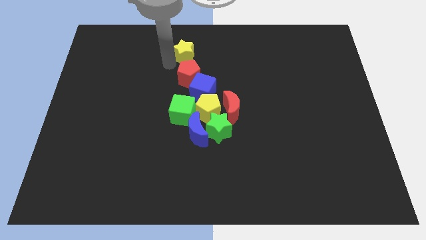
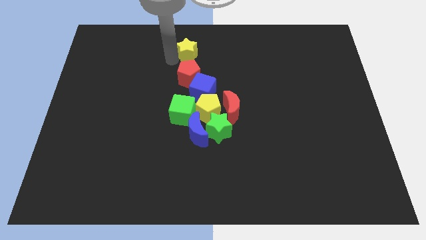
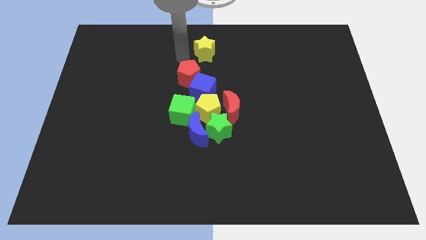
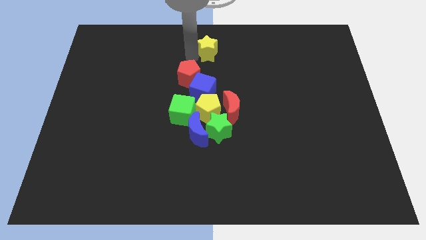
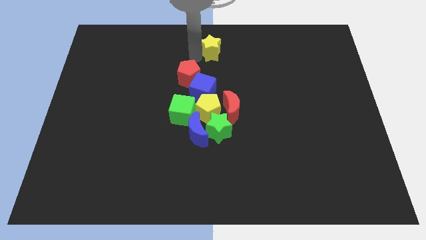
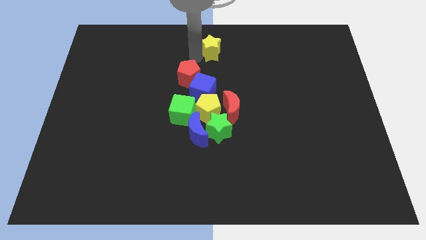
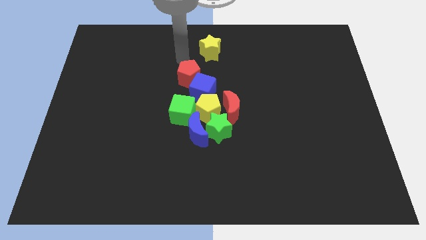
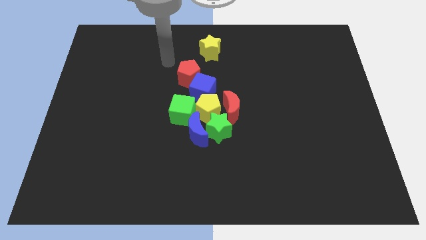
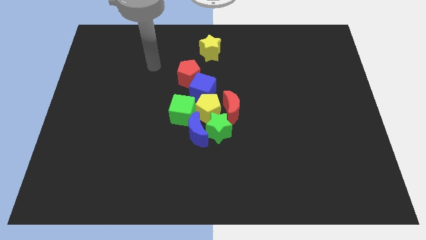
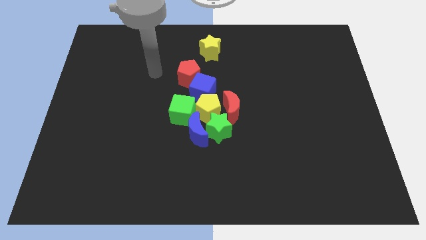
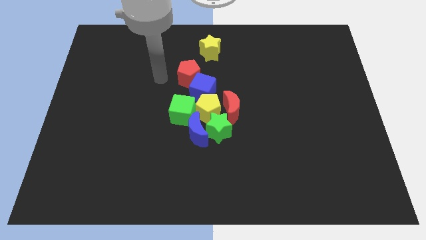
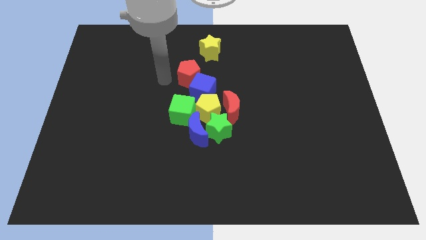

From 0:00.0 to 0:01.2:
separate yellow star from the red pentagon

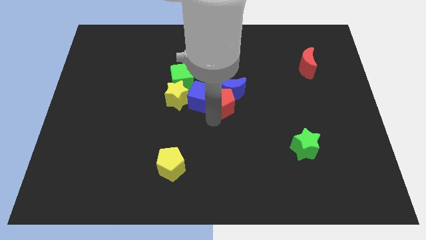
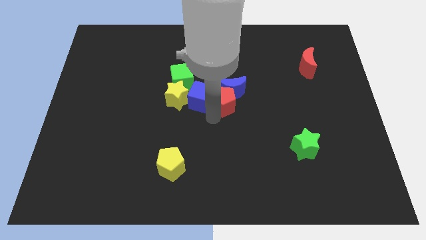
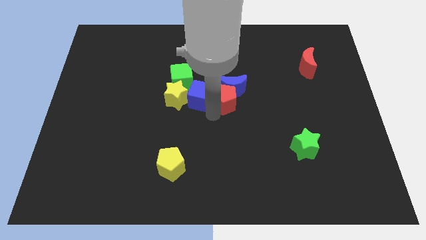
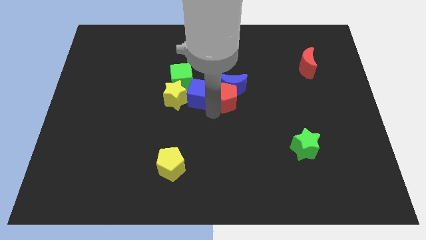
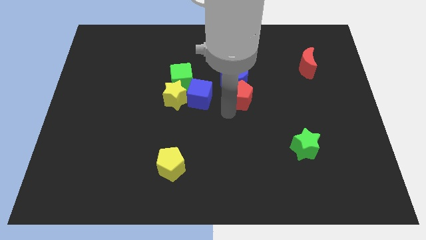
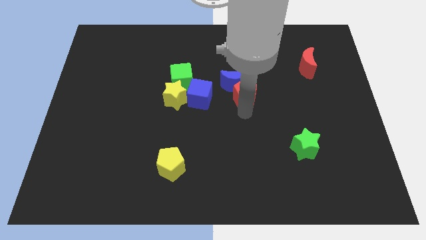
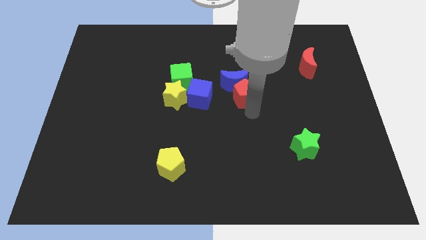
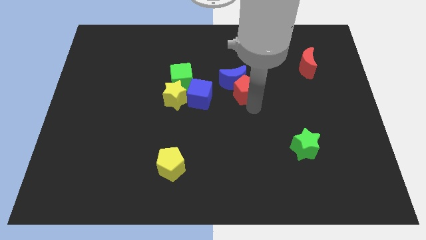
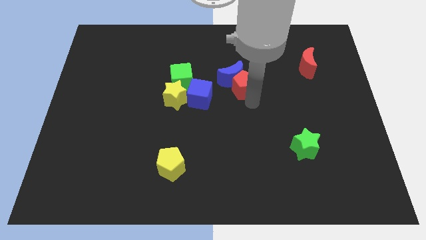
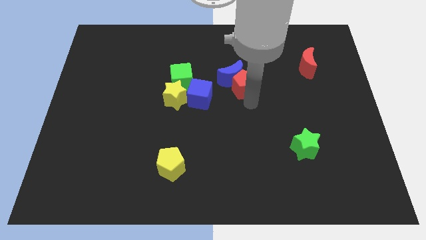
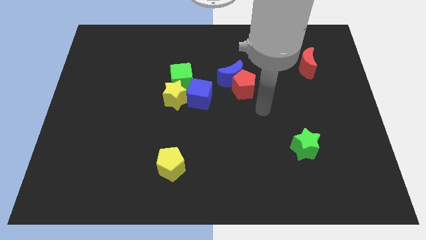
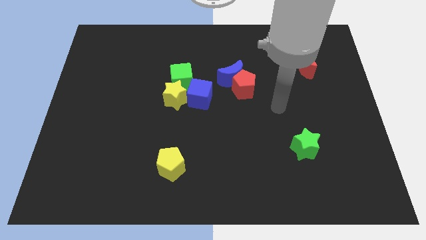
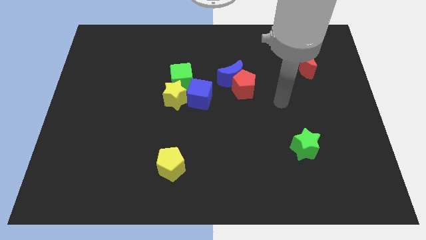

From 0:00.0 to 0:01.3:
push the blue crescent with the help of red pentagon

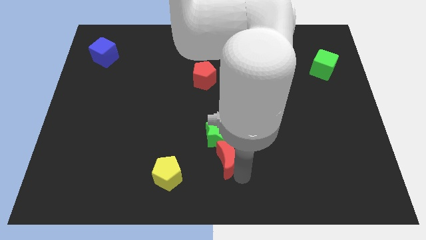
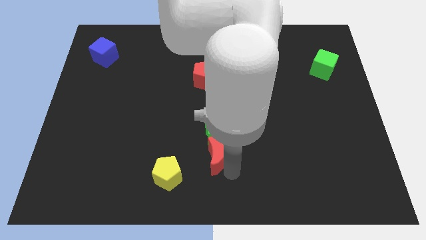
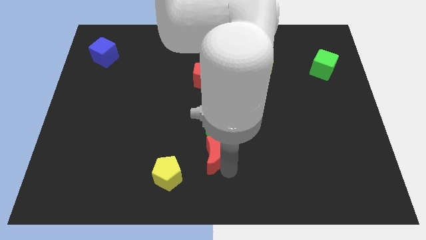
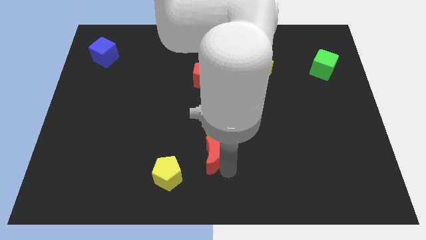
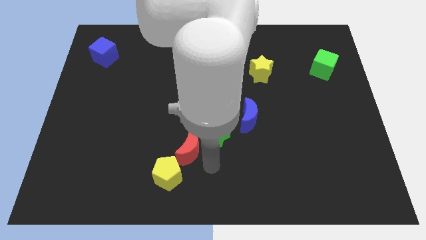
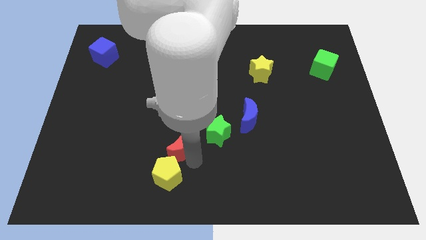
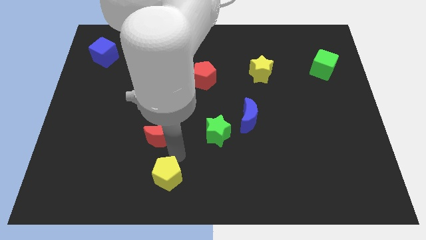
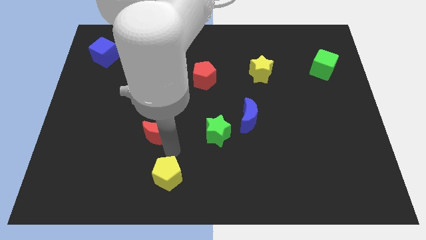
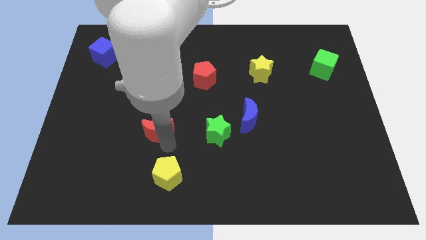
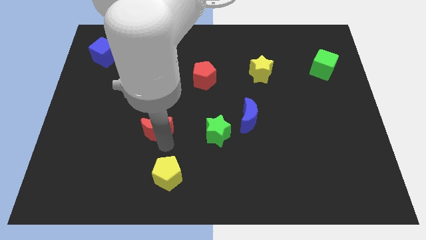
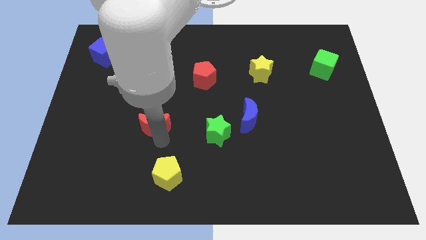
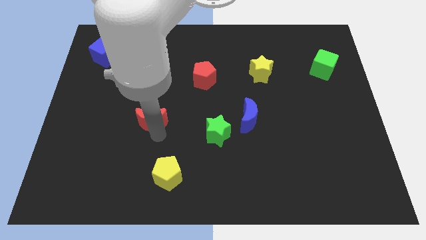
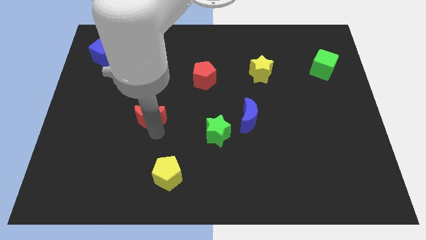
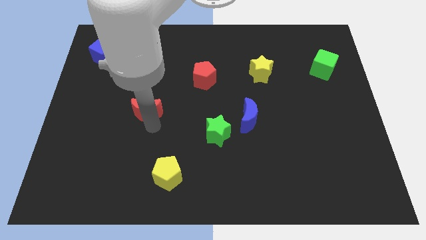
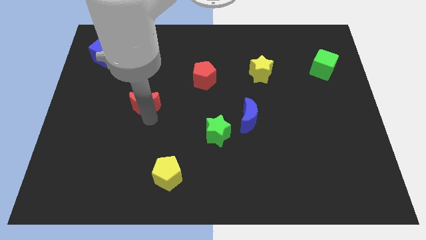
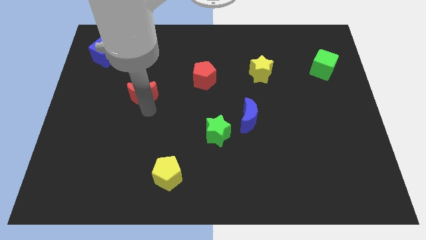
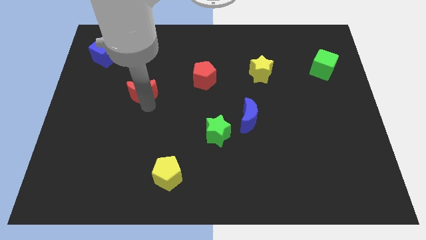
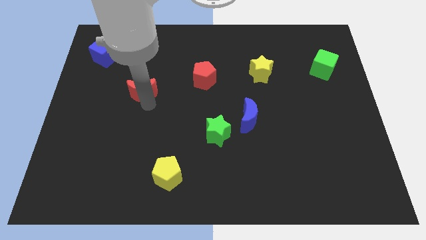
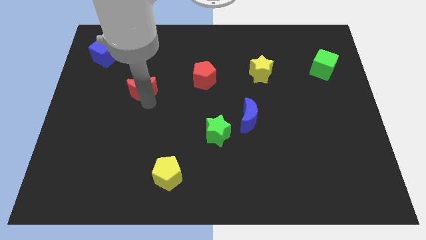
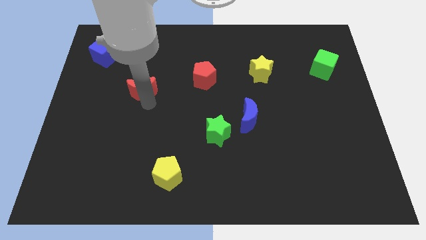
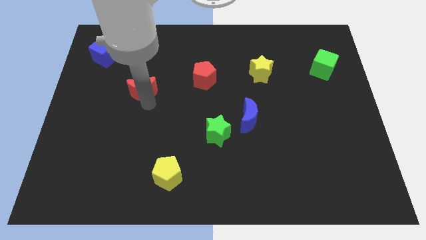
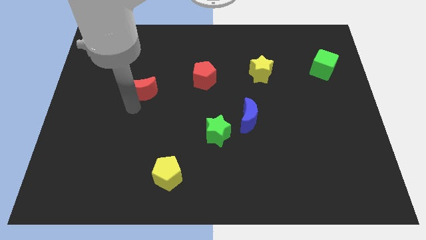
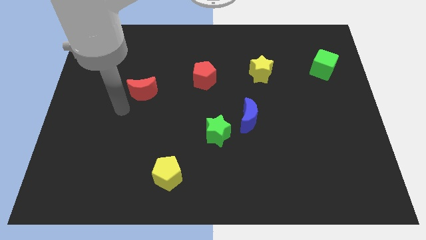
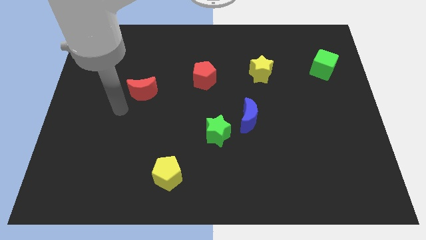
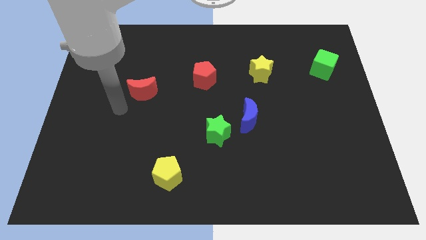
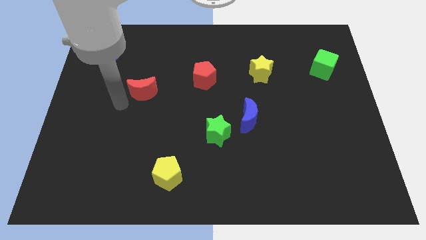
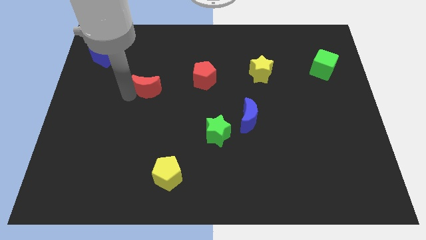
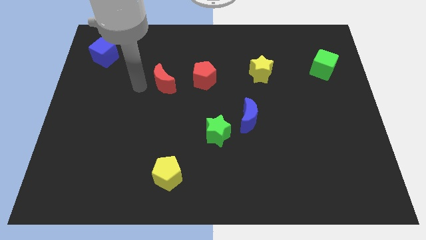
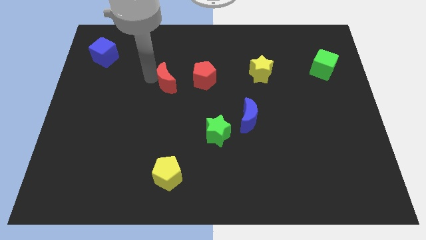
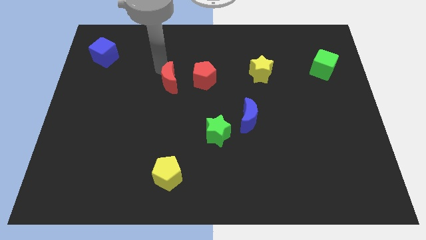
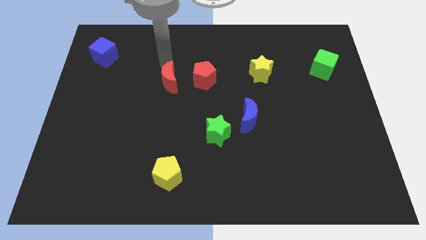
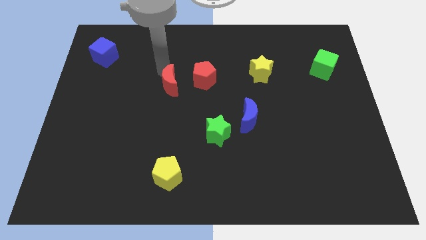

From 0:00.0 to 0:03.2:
put the red moon parallel left to the red pentagon

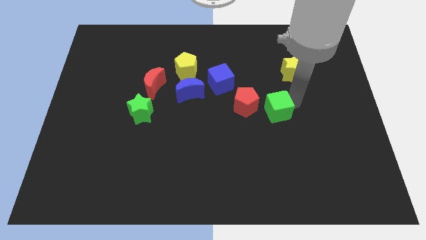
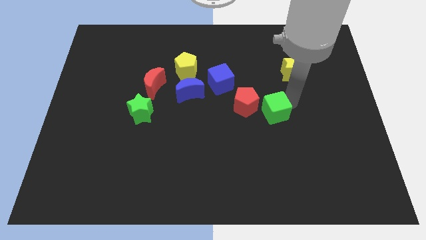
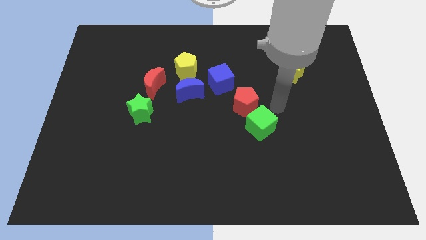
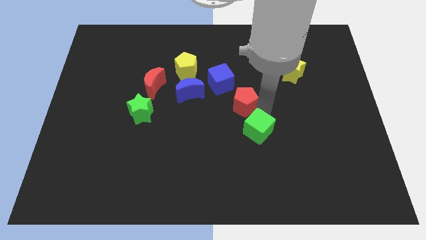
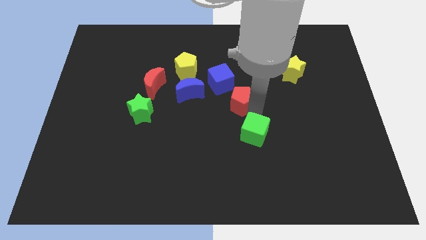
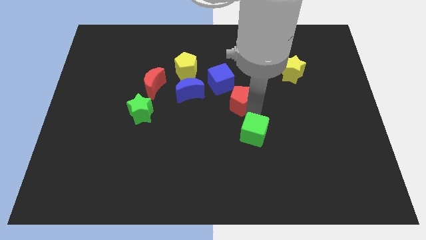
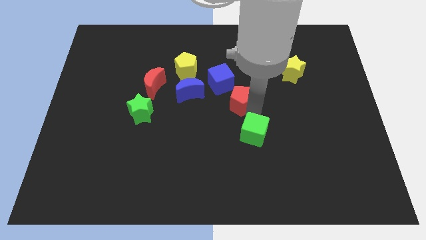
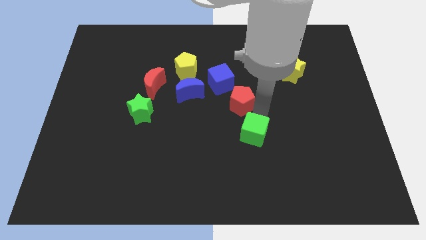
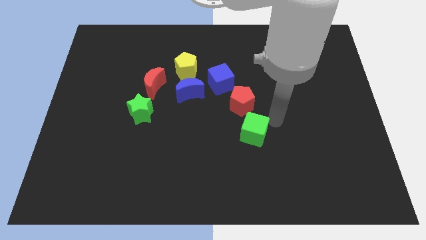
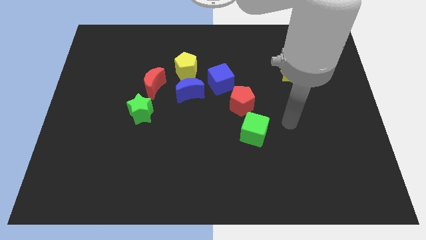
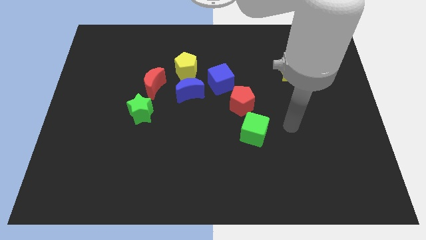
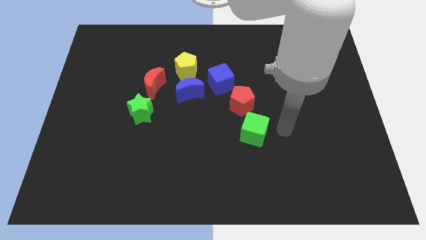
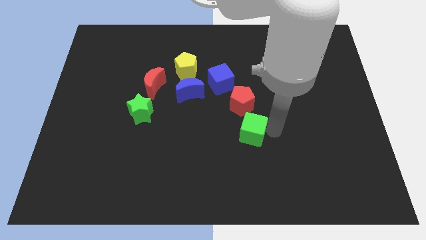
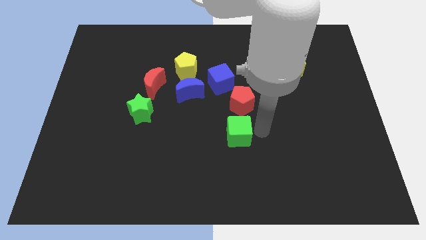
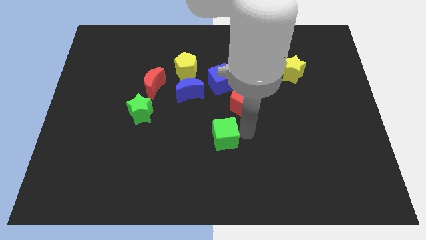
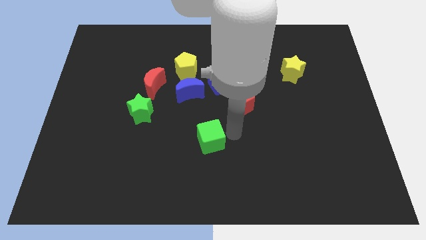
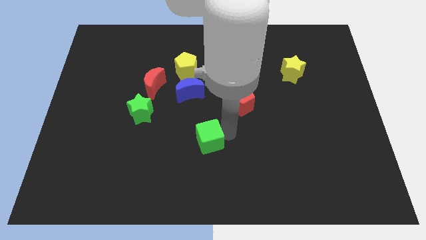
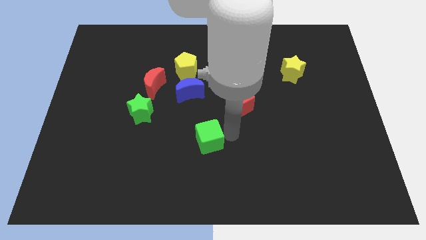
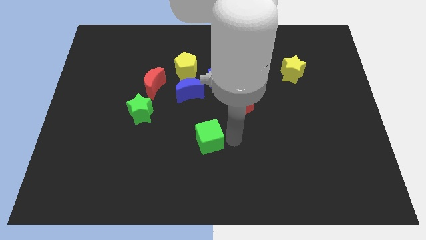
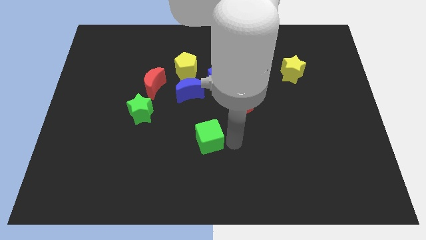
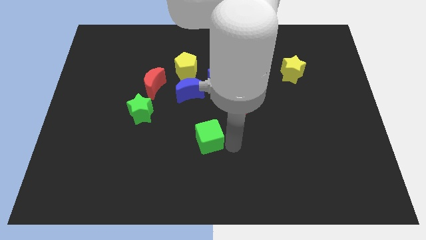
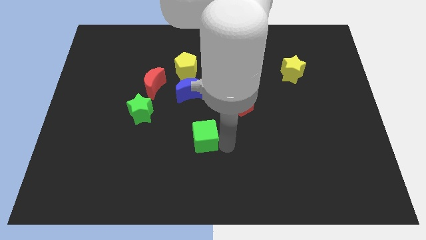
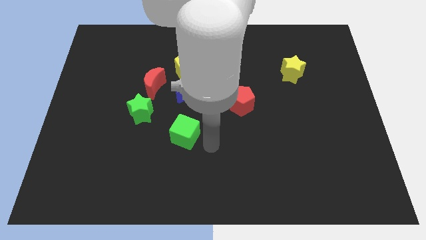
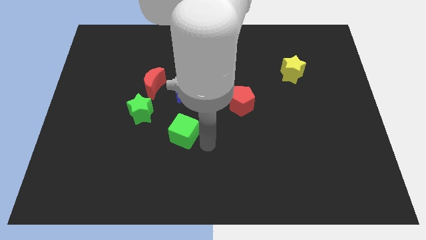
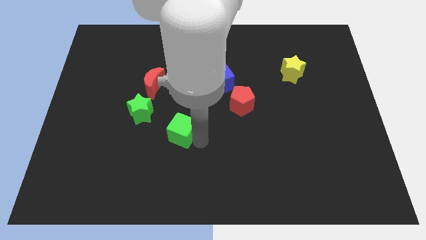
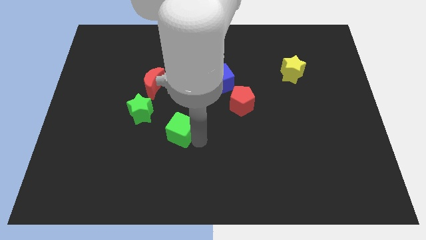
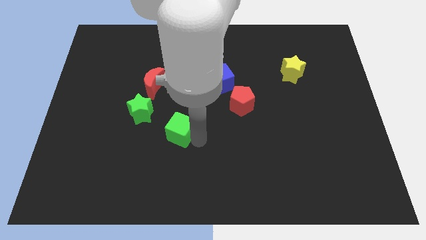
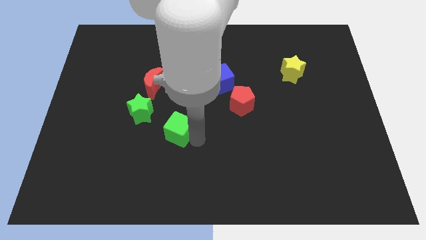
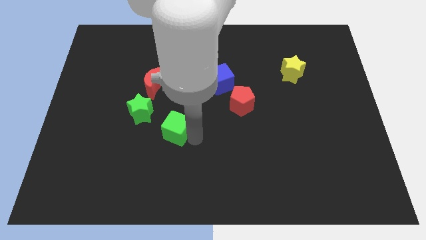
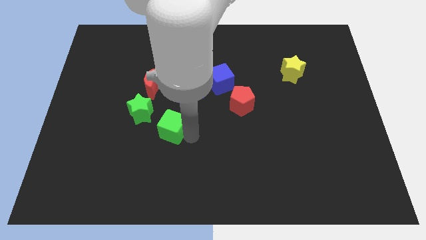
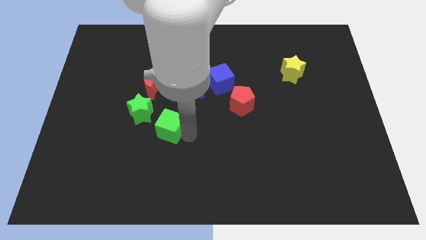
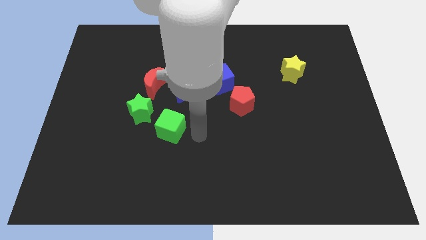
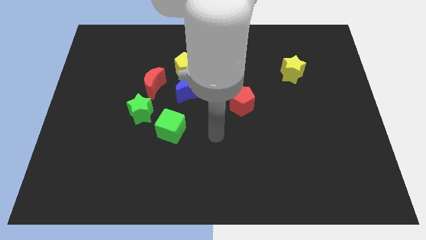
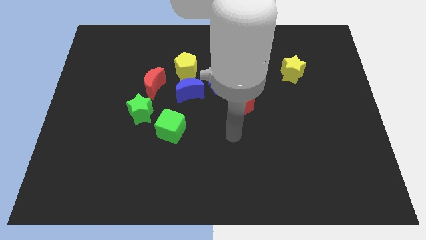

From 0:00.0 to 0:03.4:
place the green cube below the red moon
